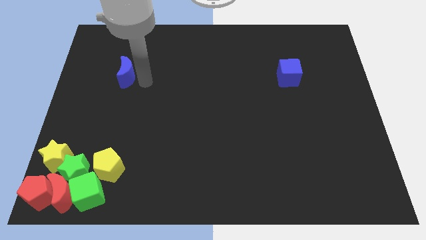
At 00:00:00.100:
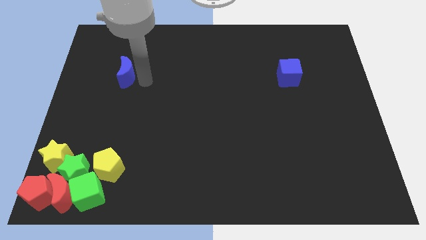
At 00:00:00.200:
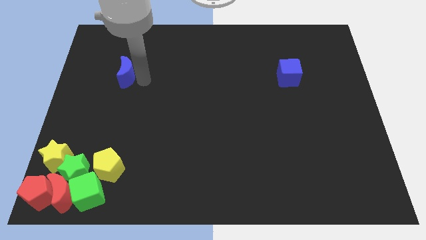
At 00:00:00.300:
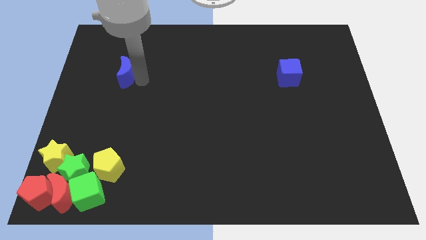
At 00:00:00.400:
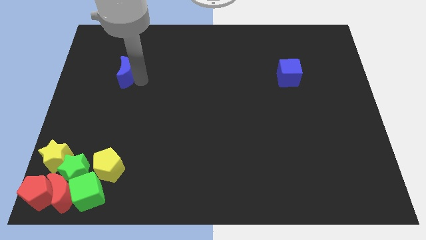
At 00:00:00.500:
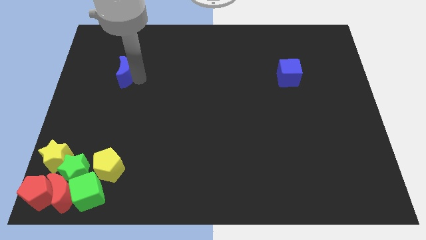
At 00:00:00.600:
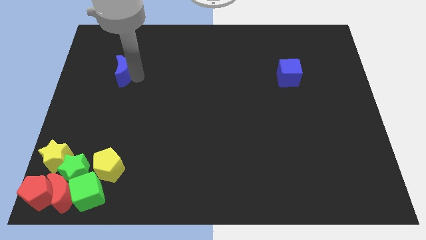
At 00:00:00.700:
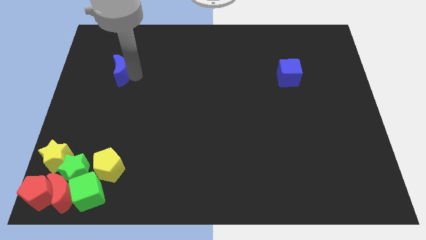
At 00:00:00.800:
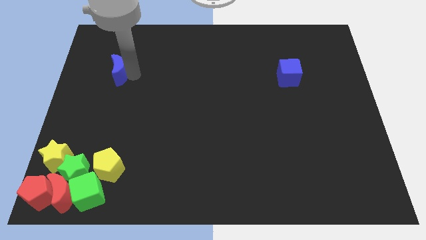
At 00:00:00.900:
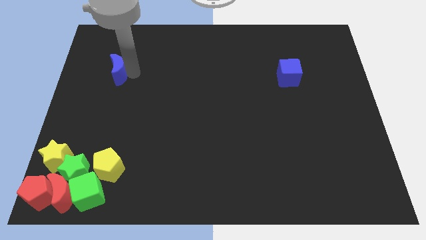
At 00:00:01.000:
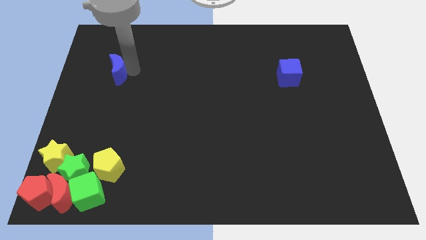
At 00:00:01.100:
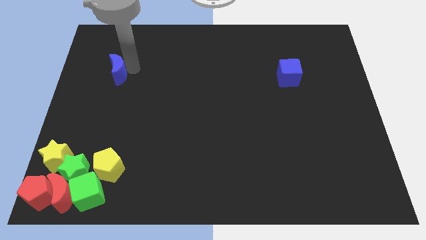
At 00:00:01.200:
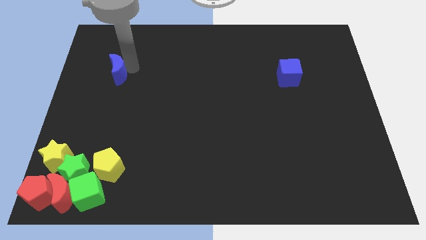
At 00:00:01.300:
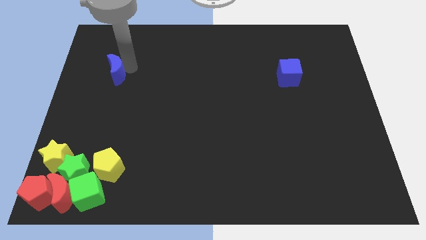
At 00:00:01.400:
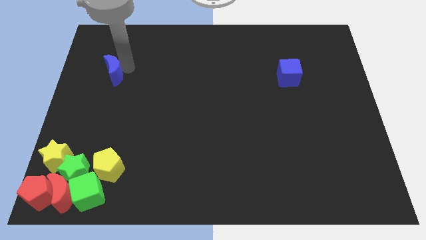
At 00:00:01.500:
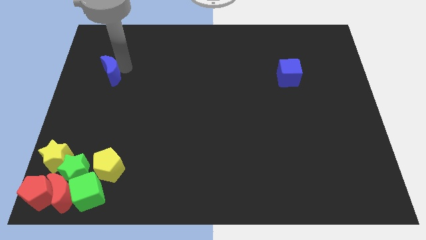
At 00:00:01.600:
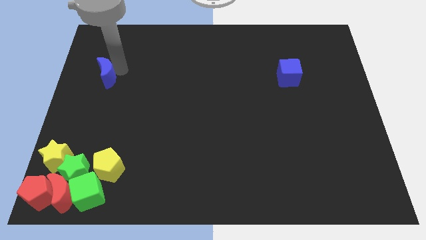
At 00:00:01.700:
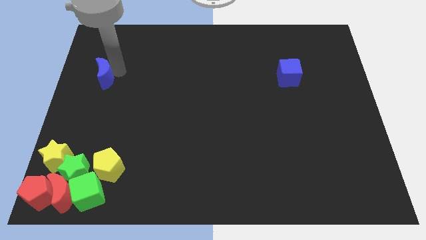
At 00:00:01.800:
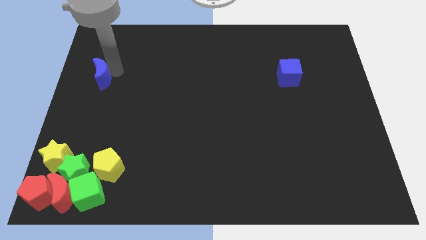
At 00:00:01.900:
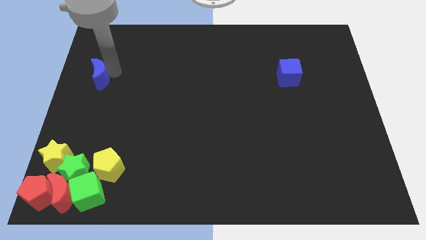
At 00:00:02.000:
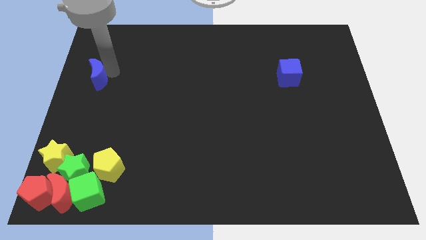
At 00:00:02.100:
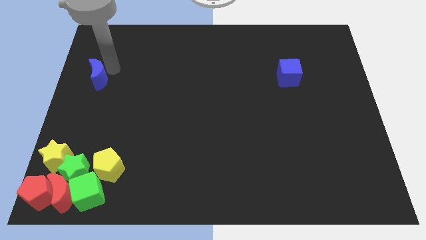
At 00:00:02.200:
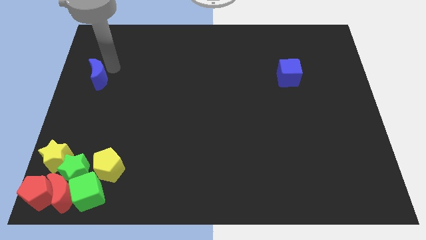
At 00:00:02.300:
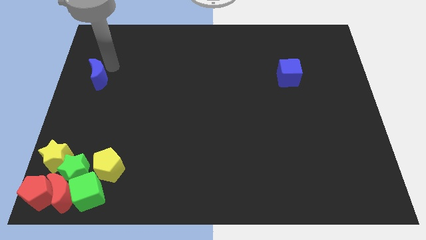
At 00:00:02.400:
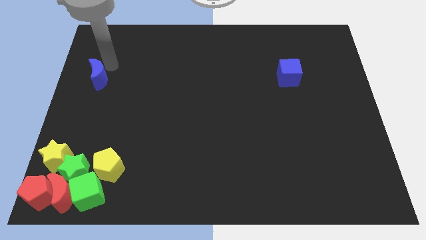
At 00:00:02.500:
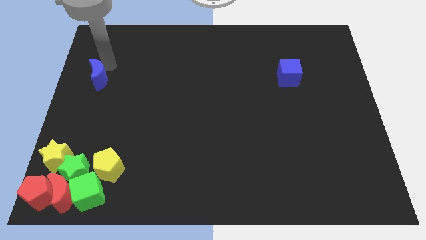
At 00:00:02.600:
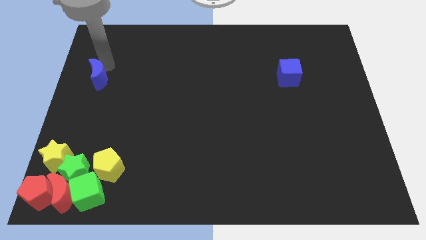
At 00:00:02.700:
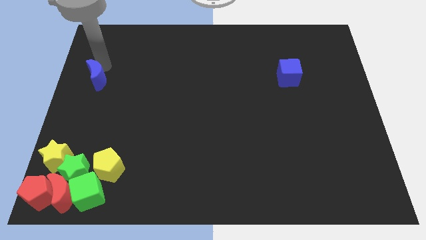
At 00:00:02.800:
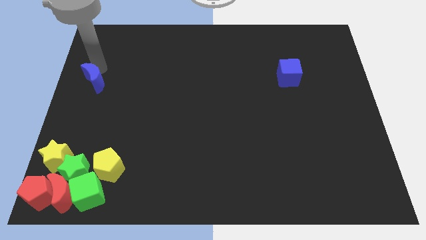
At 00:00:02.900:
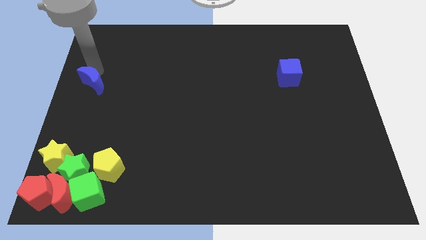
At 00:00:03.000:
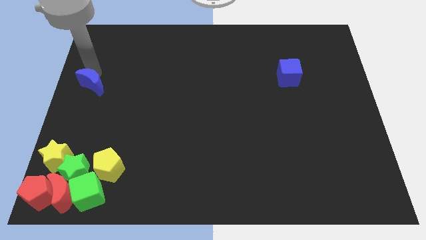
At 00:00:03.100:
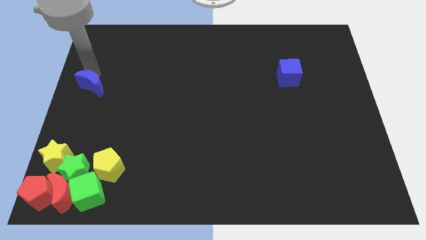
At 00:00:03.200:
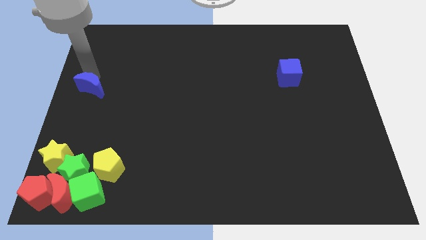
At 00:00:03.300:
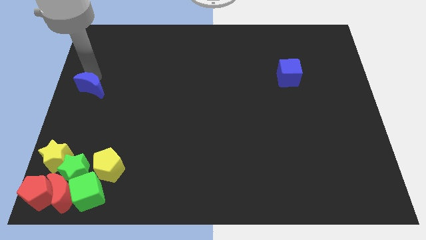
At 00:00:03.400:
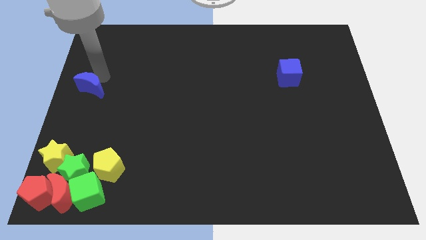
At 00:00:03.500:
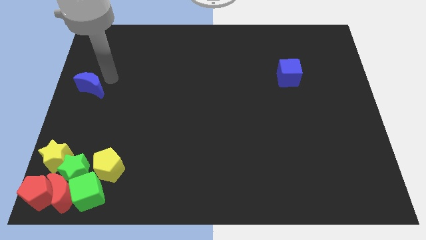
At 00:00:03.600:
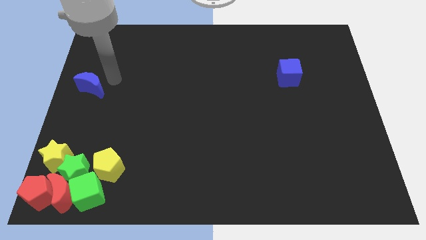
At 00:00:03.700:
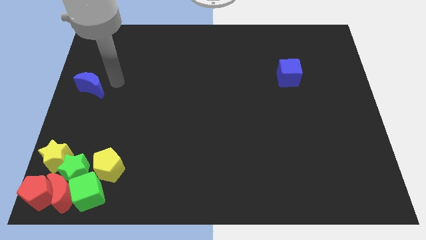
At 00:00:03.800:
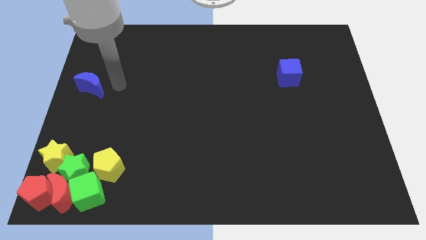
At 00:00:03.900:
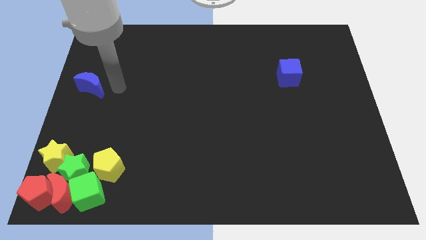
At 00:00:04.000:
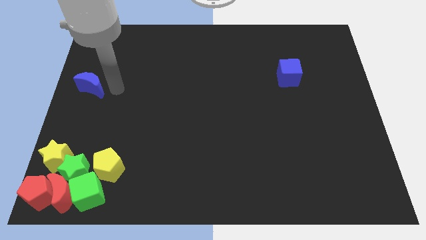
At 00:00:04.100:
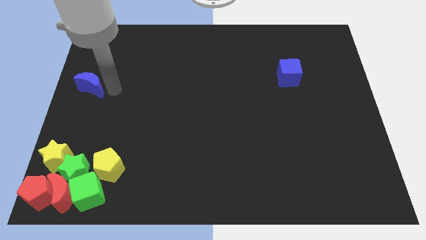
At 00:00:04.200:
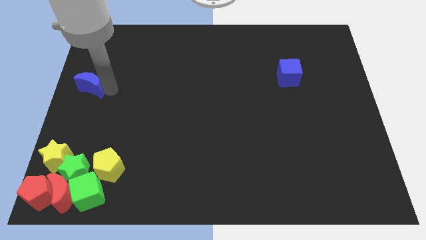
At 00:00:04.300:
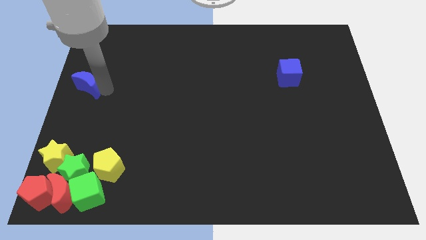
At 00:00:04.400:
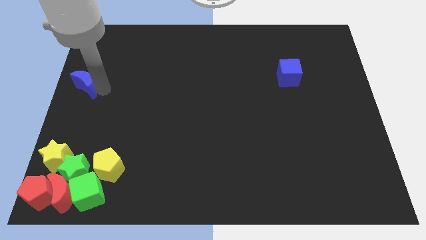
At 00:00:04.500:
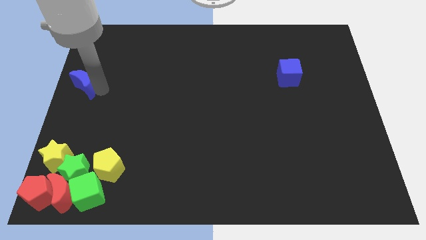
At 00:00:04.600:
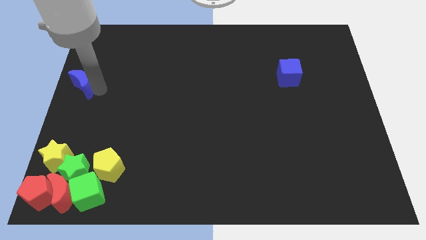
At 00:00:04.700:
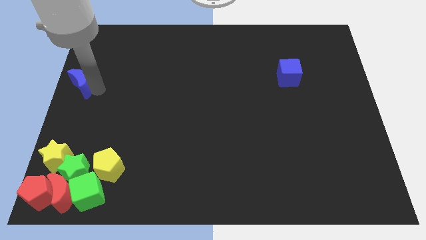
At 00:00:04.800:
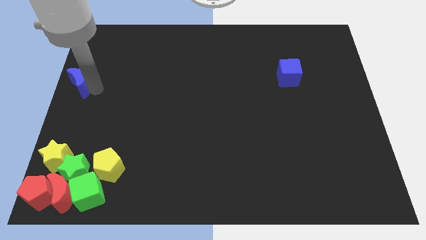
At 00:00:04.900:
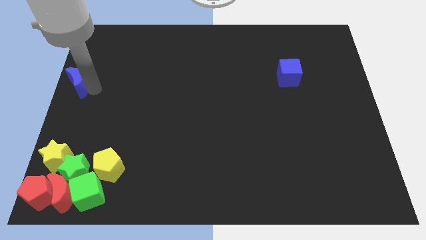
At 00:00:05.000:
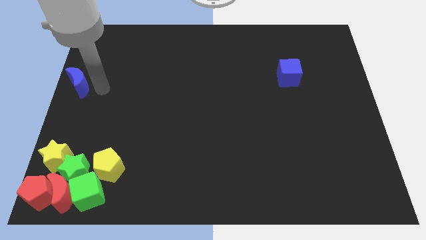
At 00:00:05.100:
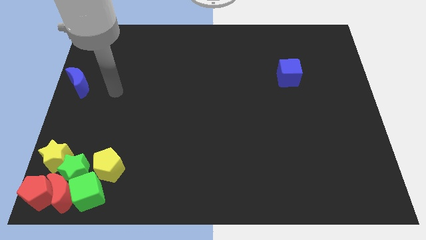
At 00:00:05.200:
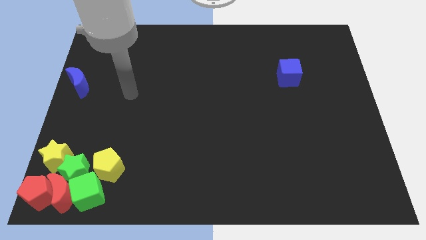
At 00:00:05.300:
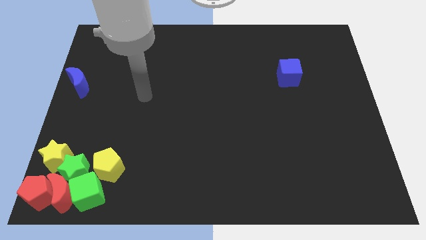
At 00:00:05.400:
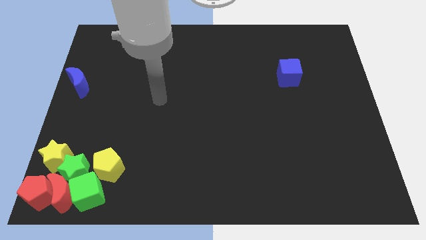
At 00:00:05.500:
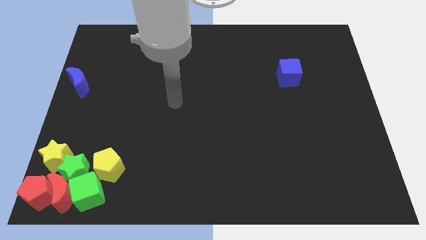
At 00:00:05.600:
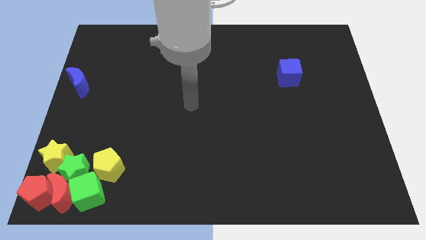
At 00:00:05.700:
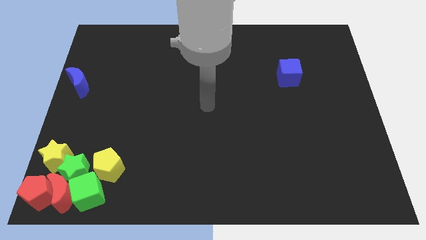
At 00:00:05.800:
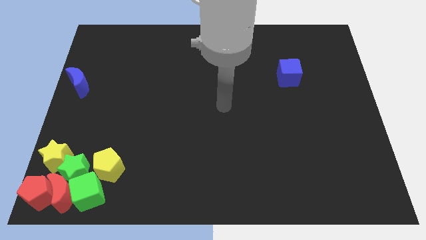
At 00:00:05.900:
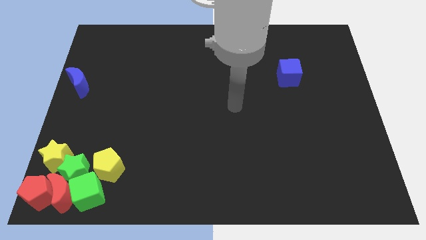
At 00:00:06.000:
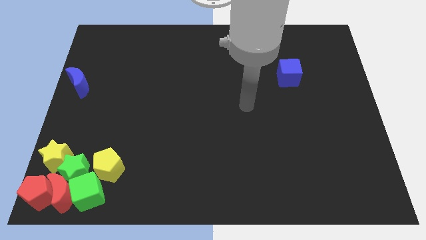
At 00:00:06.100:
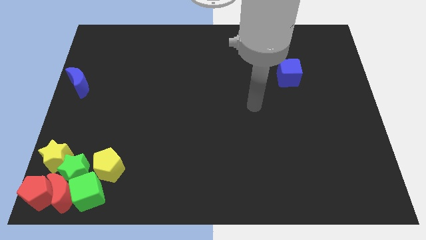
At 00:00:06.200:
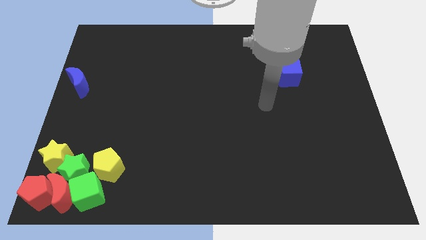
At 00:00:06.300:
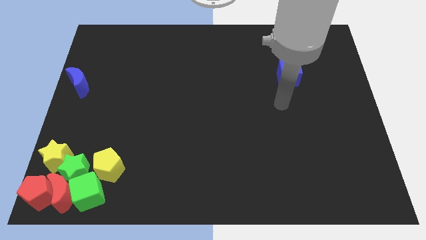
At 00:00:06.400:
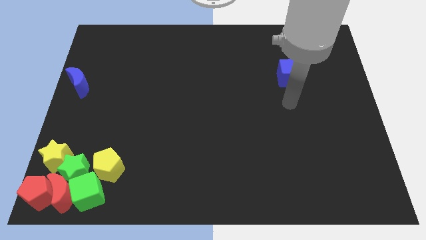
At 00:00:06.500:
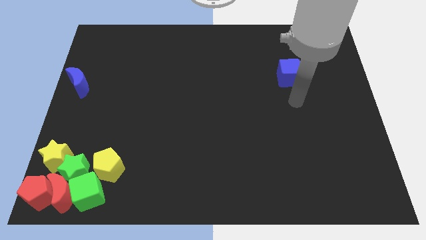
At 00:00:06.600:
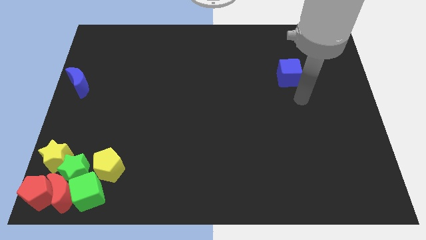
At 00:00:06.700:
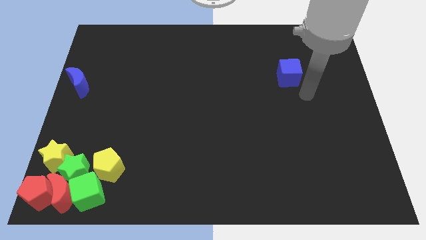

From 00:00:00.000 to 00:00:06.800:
push the blue crescent towards the left center of the board

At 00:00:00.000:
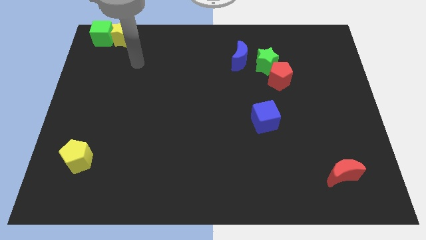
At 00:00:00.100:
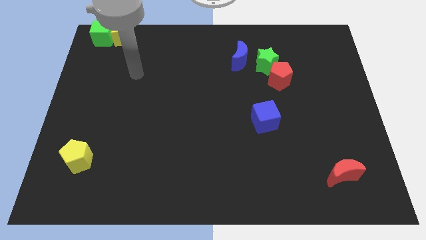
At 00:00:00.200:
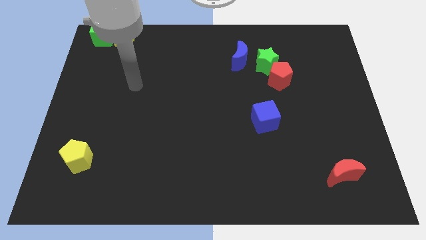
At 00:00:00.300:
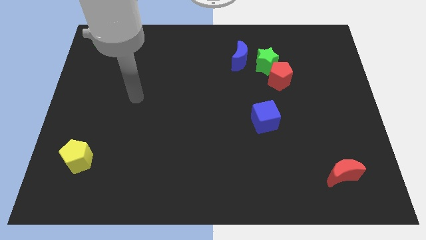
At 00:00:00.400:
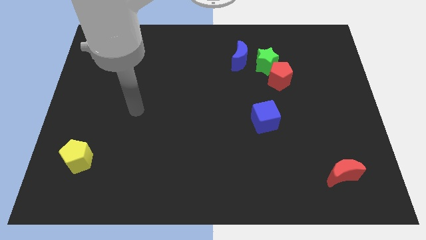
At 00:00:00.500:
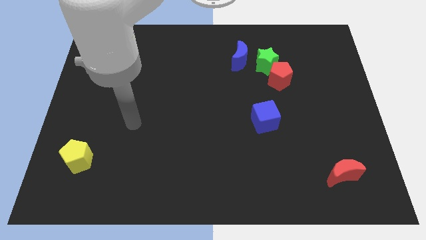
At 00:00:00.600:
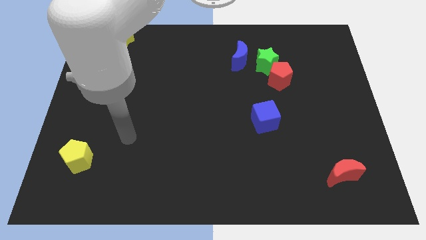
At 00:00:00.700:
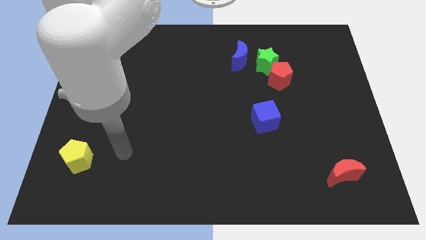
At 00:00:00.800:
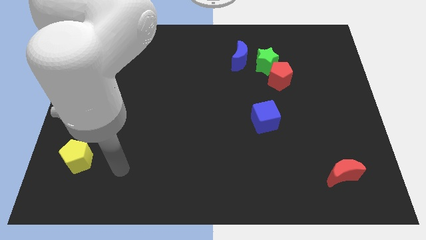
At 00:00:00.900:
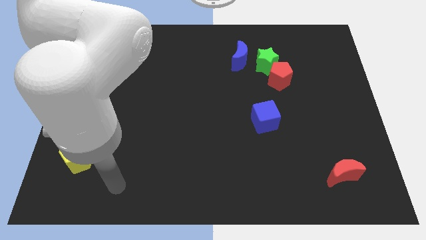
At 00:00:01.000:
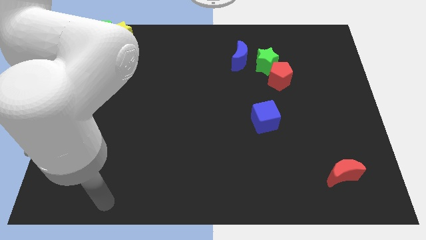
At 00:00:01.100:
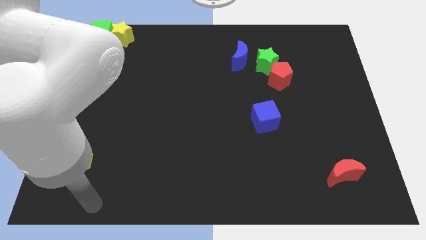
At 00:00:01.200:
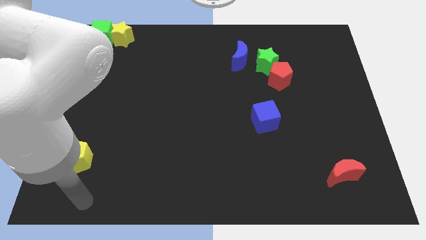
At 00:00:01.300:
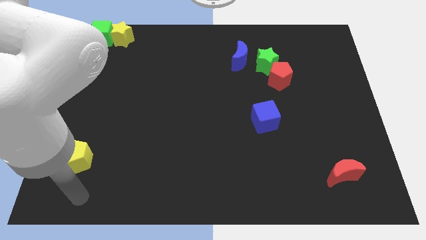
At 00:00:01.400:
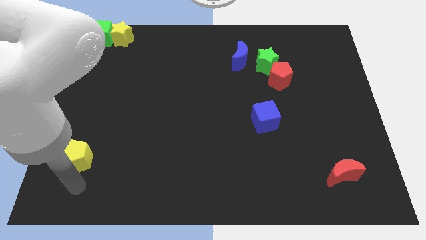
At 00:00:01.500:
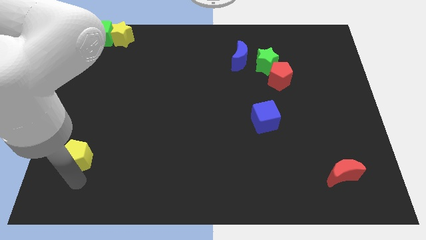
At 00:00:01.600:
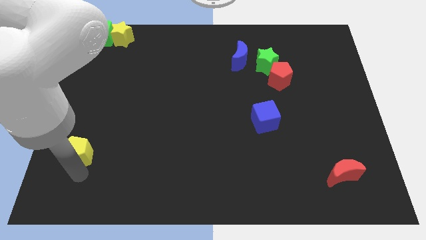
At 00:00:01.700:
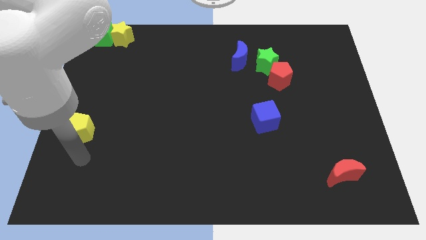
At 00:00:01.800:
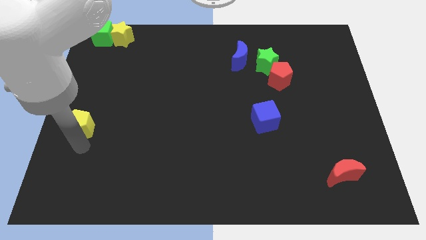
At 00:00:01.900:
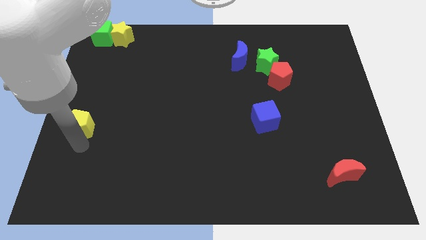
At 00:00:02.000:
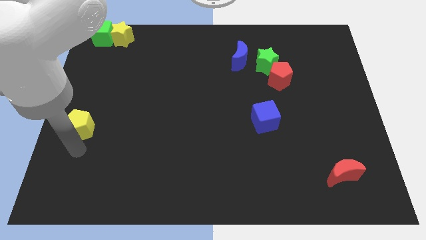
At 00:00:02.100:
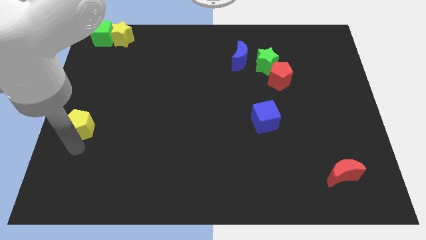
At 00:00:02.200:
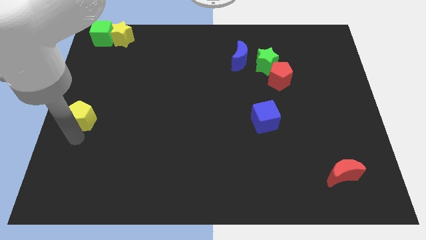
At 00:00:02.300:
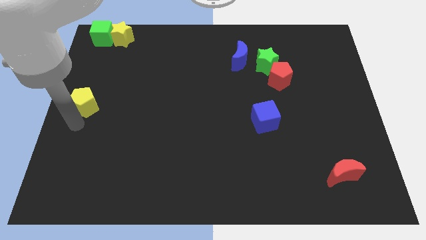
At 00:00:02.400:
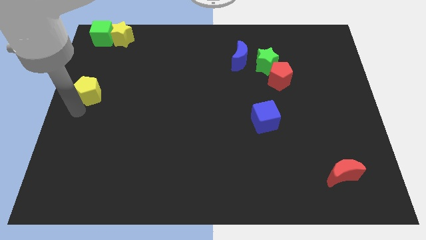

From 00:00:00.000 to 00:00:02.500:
push yellow pentagon slightly towards upwards
